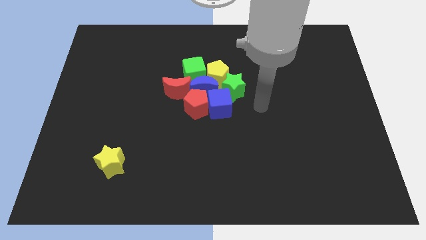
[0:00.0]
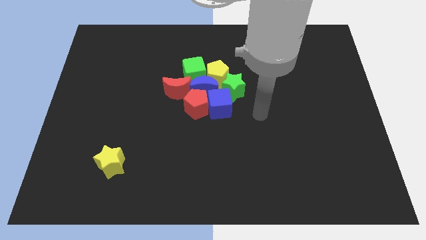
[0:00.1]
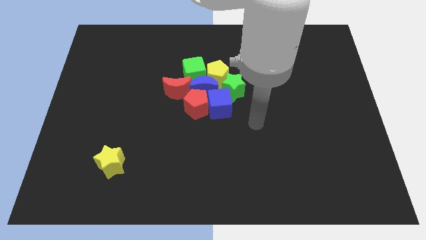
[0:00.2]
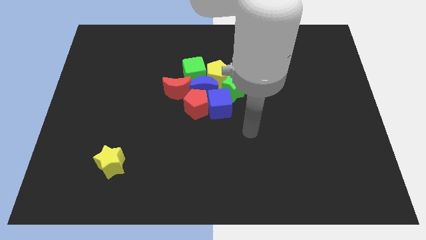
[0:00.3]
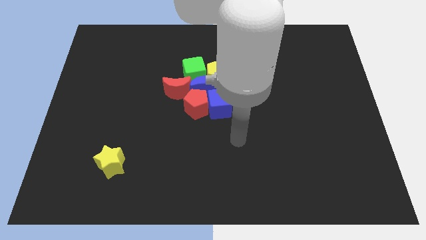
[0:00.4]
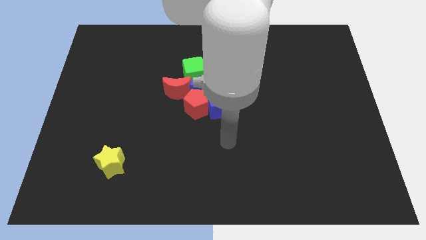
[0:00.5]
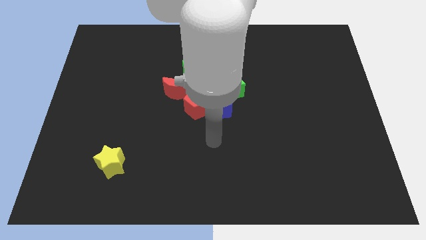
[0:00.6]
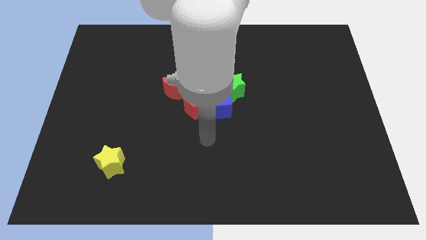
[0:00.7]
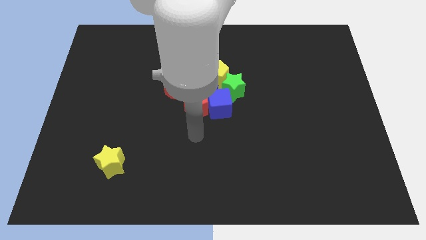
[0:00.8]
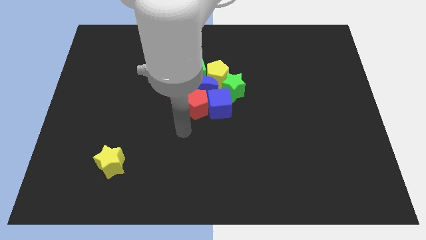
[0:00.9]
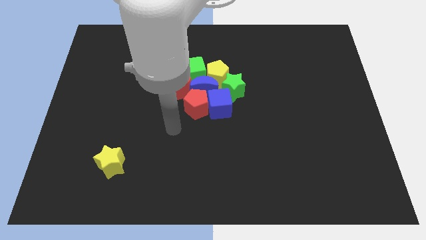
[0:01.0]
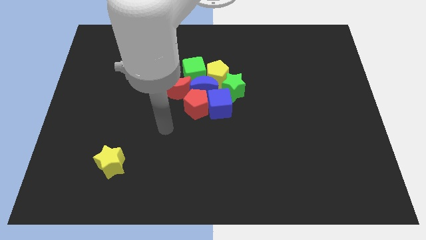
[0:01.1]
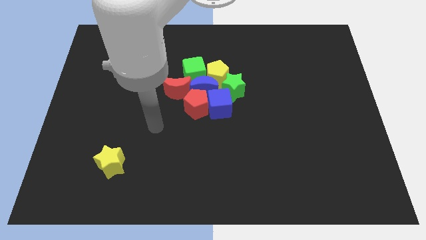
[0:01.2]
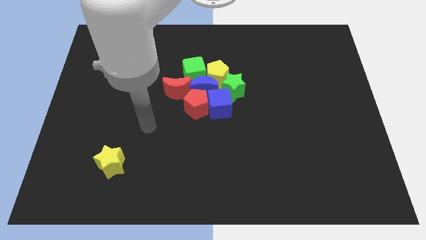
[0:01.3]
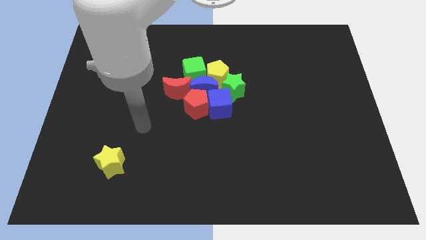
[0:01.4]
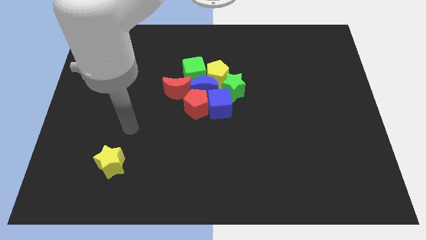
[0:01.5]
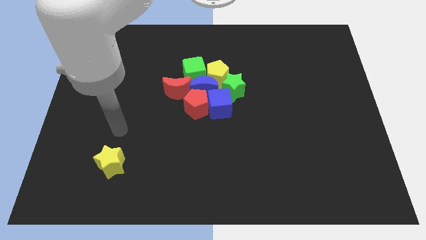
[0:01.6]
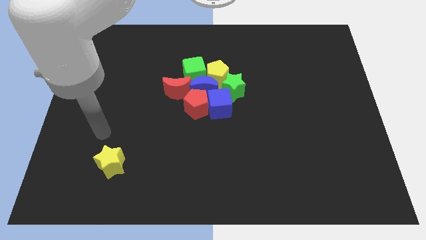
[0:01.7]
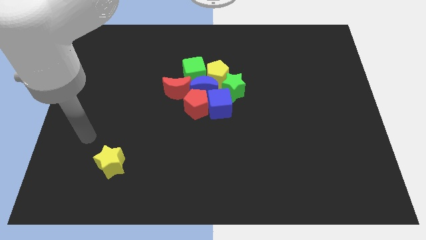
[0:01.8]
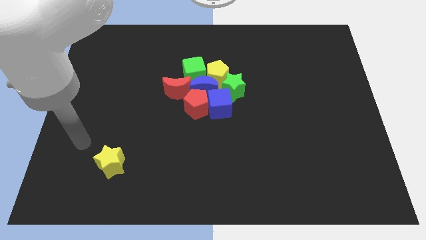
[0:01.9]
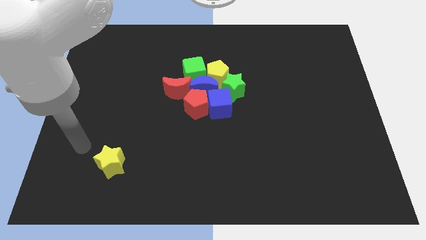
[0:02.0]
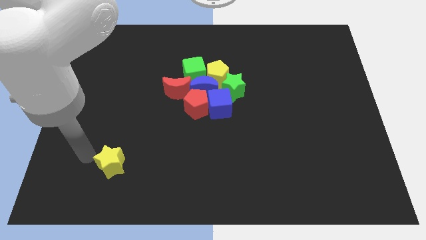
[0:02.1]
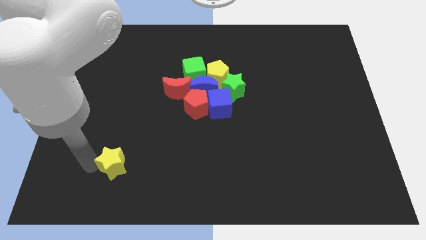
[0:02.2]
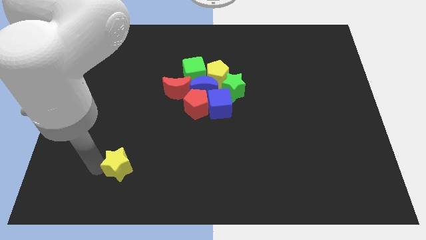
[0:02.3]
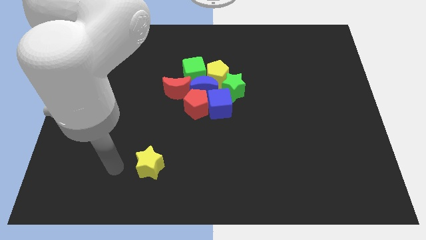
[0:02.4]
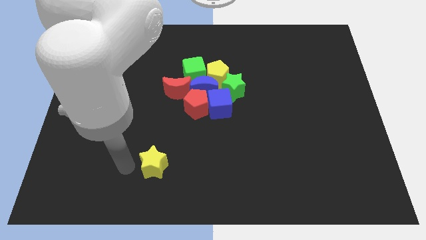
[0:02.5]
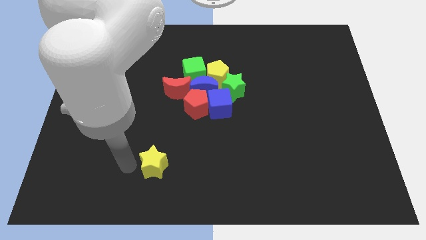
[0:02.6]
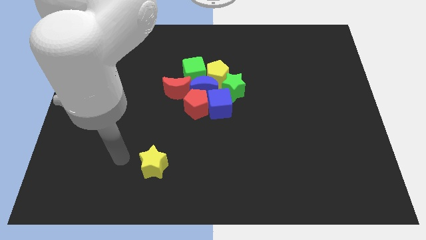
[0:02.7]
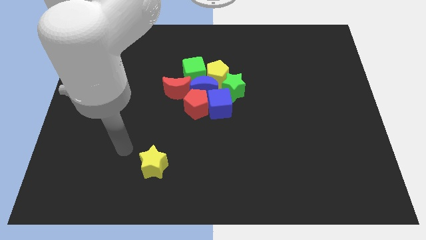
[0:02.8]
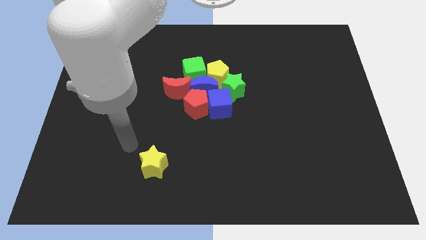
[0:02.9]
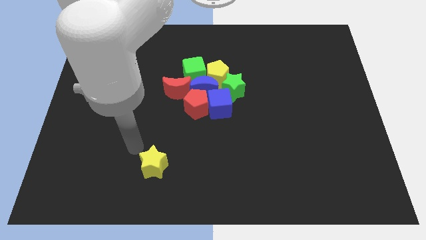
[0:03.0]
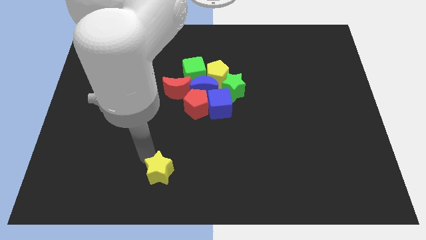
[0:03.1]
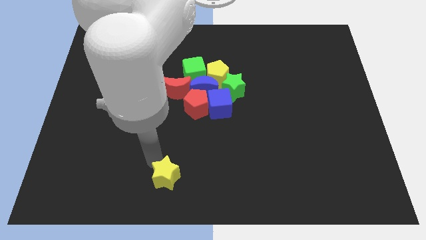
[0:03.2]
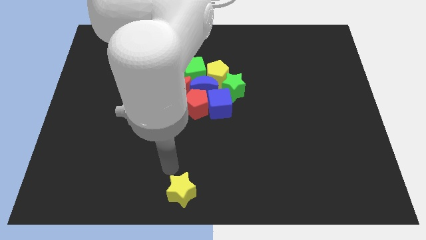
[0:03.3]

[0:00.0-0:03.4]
move yellow star towards the bottom center of the board

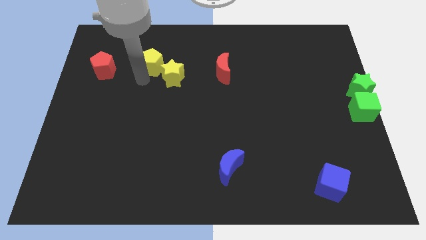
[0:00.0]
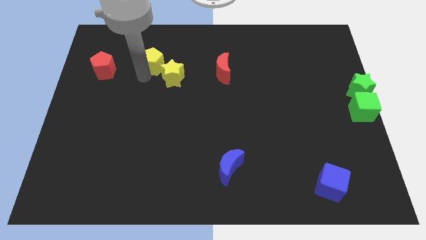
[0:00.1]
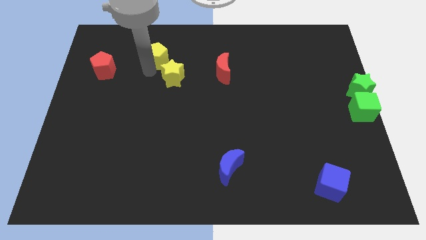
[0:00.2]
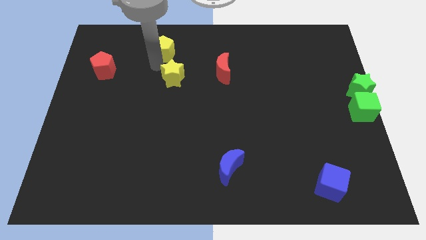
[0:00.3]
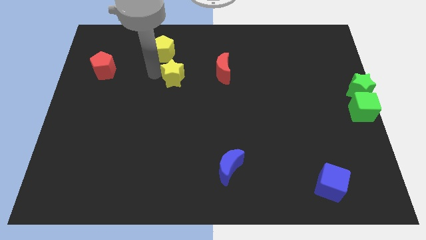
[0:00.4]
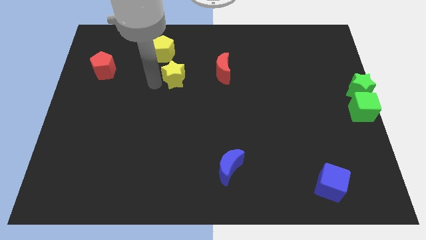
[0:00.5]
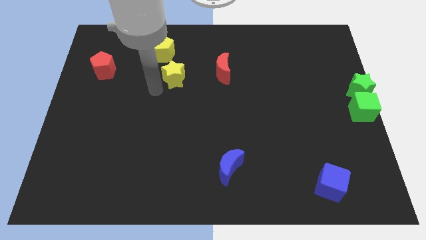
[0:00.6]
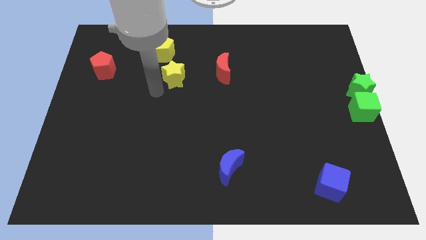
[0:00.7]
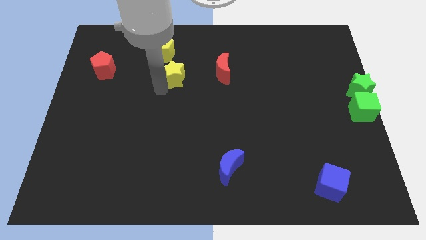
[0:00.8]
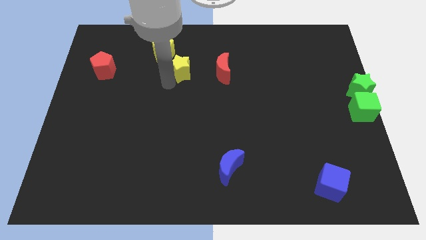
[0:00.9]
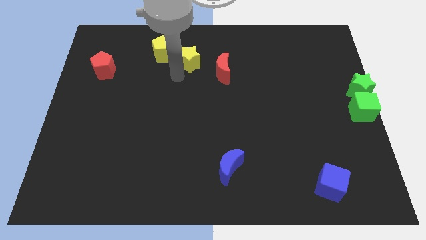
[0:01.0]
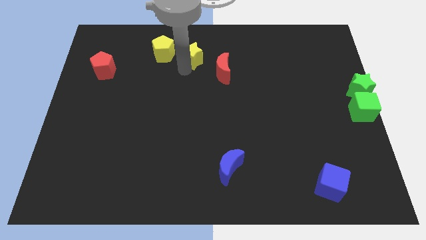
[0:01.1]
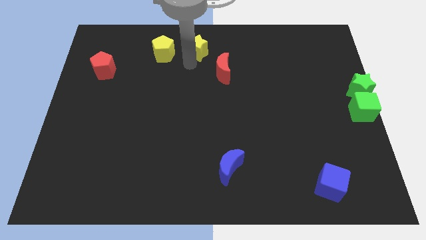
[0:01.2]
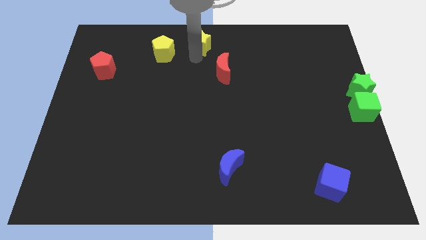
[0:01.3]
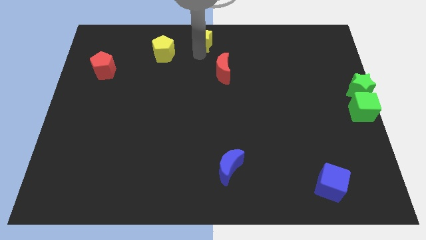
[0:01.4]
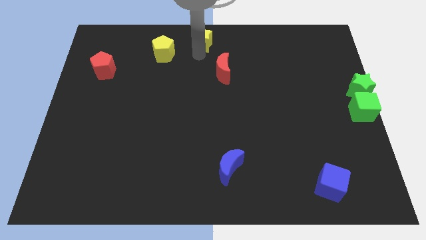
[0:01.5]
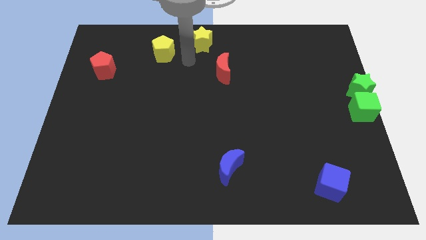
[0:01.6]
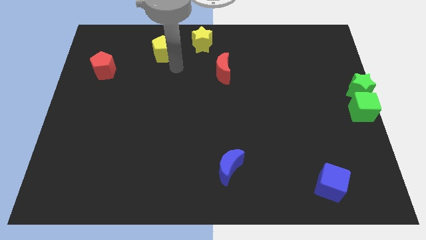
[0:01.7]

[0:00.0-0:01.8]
separate the yellow star and yellow pentagon

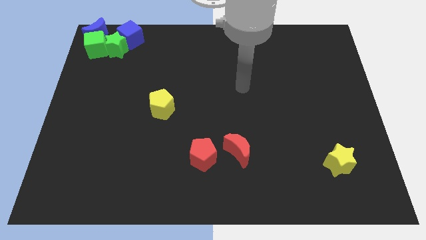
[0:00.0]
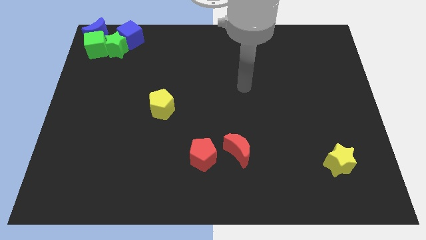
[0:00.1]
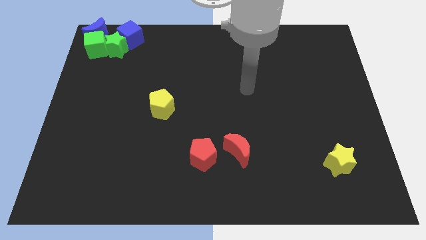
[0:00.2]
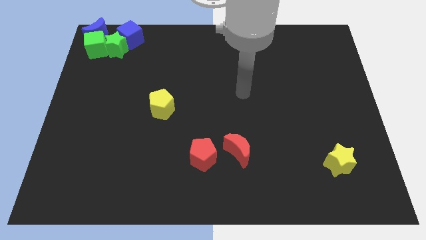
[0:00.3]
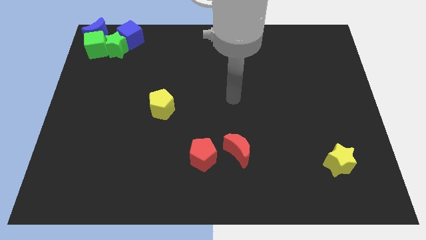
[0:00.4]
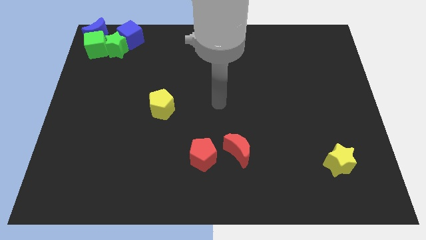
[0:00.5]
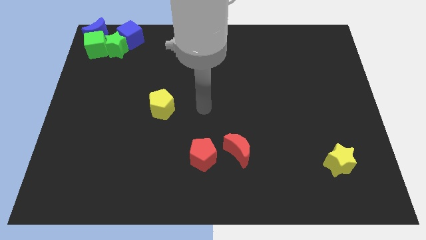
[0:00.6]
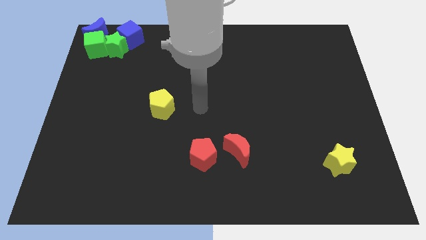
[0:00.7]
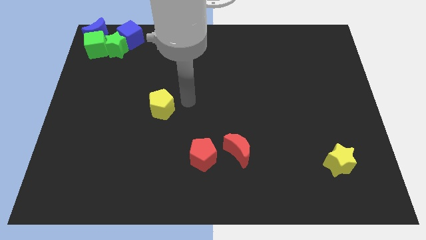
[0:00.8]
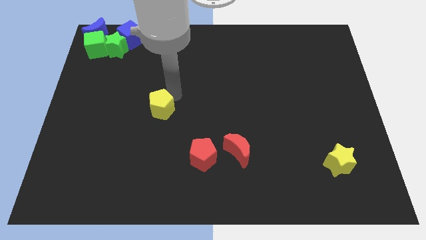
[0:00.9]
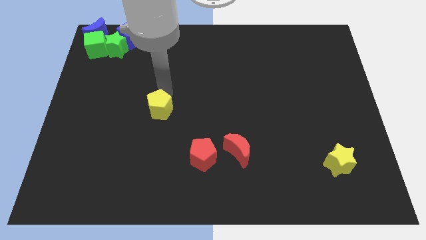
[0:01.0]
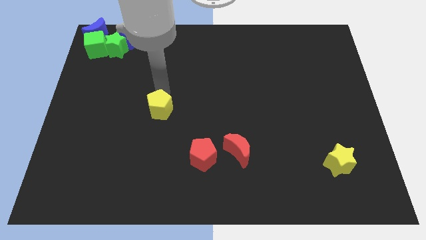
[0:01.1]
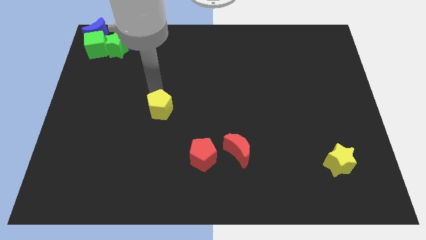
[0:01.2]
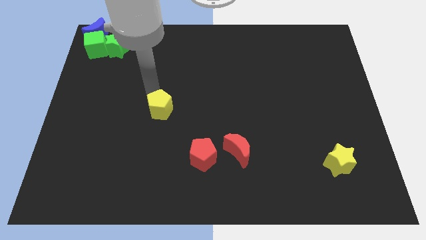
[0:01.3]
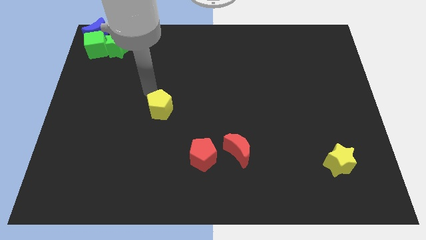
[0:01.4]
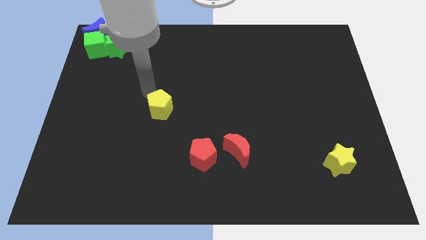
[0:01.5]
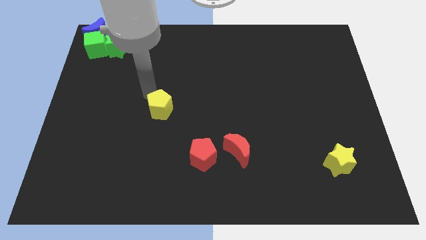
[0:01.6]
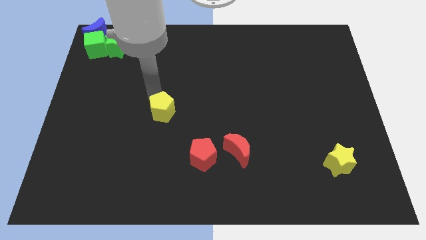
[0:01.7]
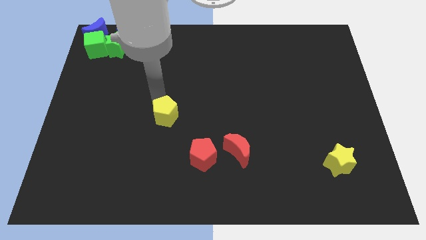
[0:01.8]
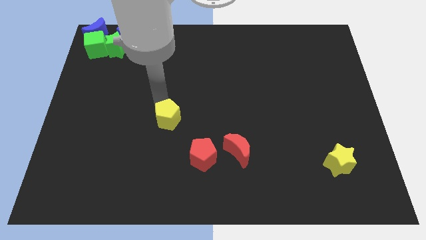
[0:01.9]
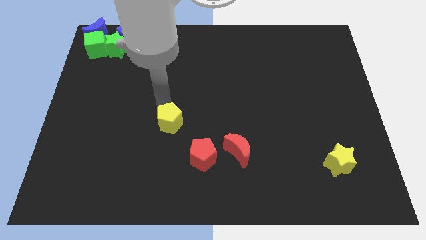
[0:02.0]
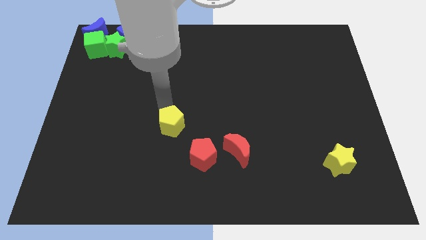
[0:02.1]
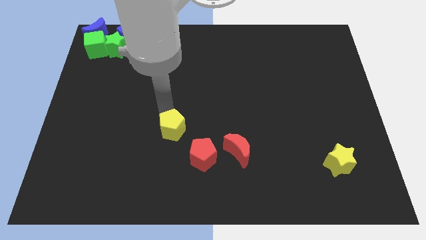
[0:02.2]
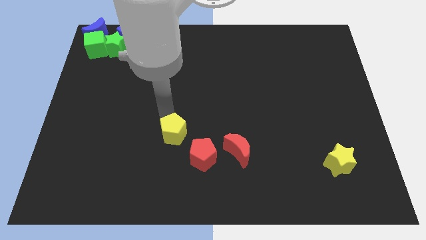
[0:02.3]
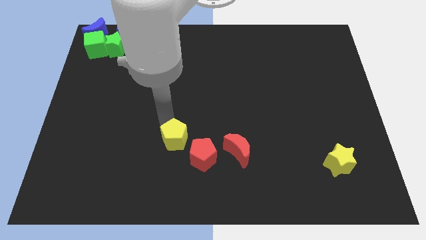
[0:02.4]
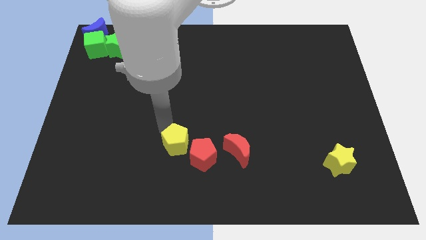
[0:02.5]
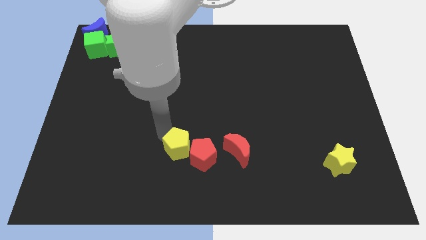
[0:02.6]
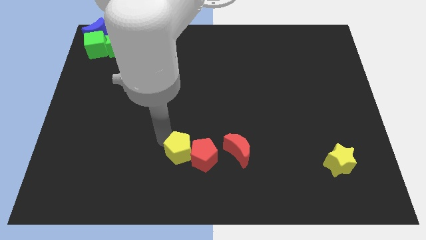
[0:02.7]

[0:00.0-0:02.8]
push the yellow pentagon close to the red pentagon

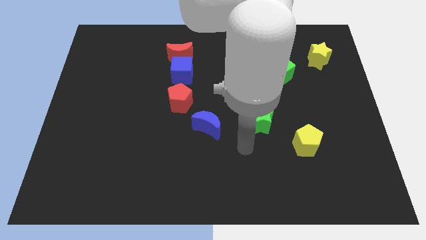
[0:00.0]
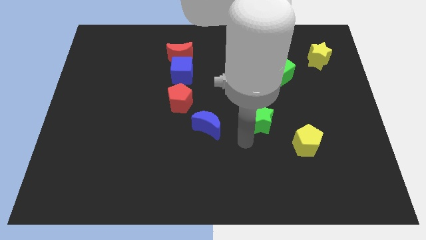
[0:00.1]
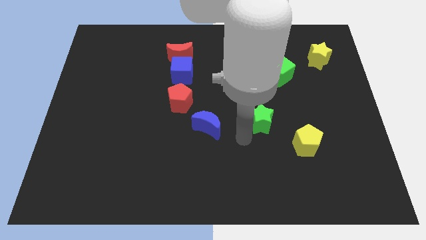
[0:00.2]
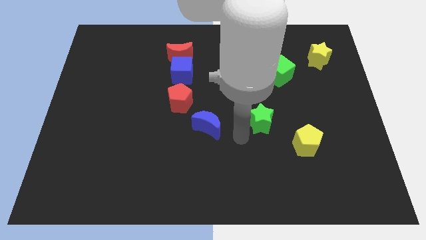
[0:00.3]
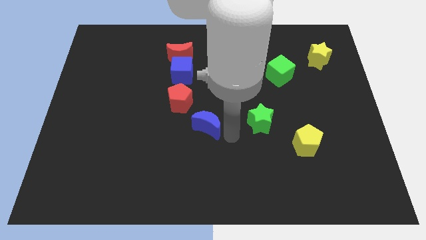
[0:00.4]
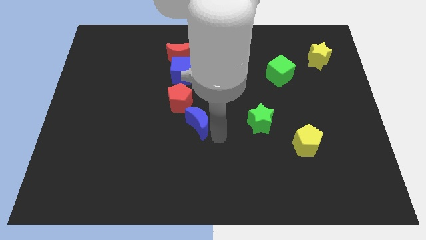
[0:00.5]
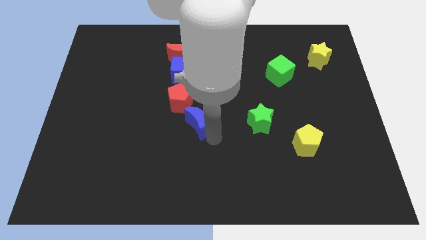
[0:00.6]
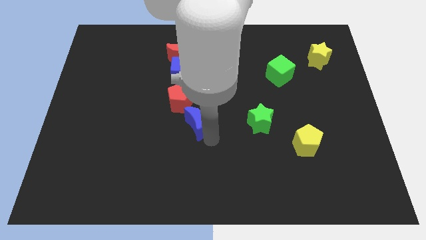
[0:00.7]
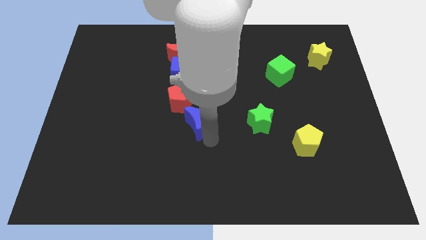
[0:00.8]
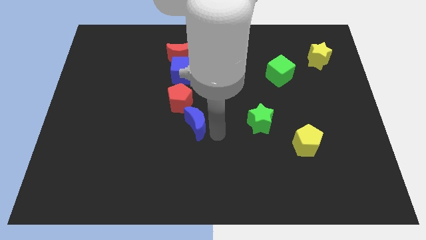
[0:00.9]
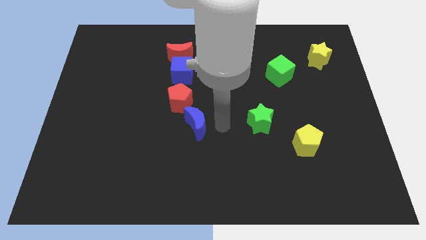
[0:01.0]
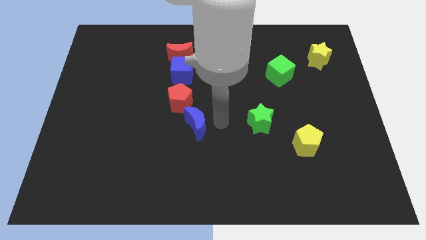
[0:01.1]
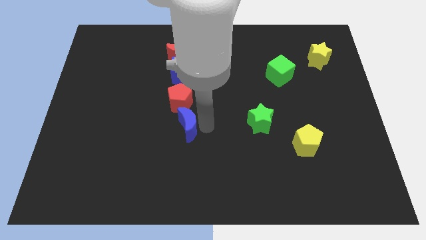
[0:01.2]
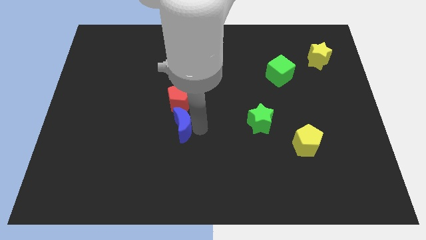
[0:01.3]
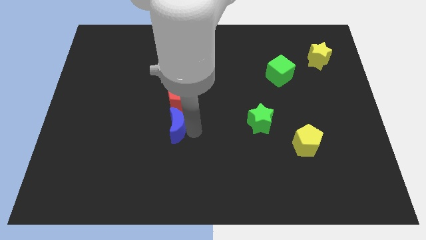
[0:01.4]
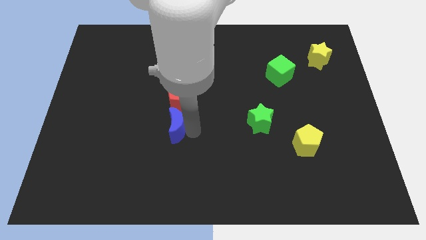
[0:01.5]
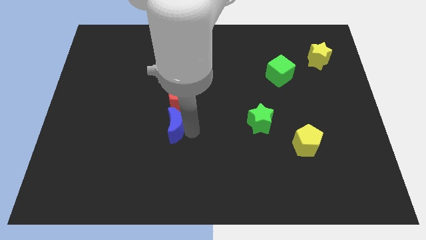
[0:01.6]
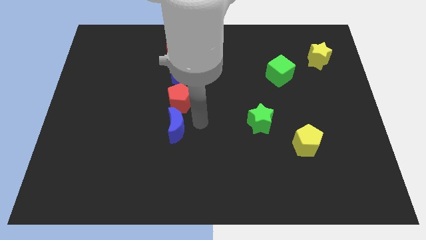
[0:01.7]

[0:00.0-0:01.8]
place the blue moon at the bottom of the red pentagon
